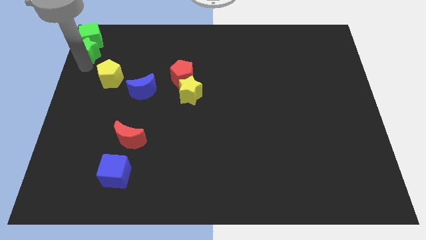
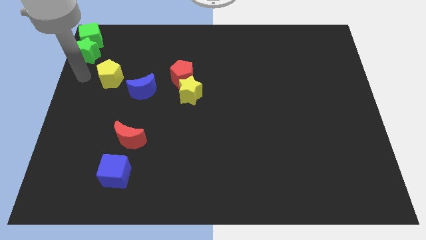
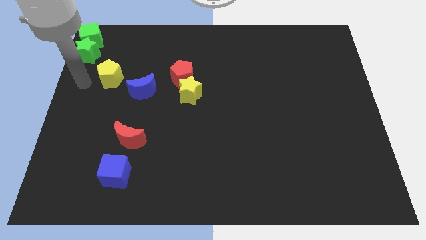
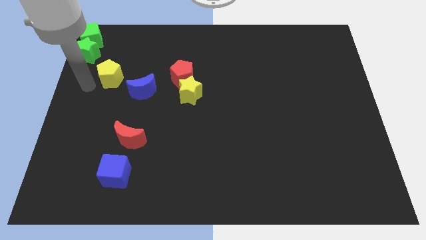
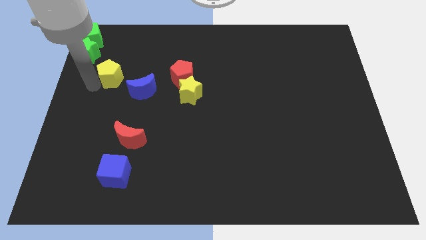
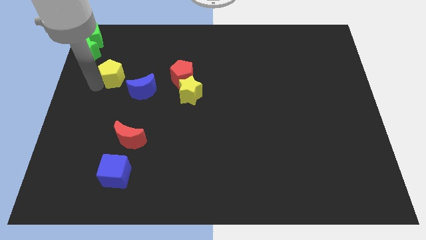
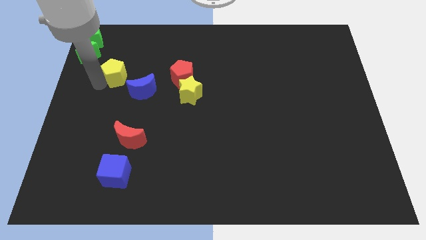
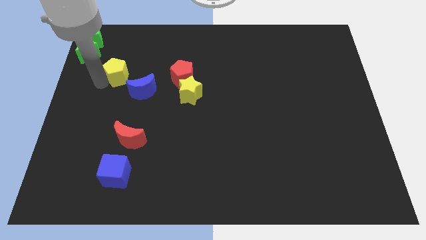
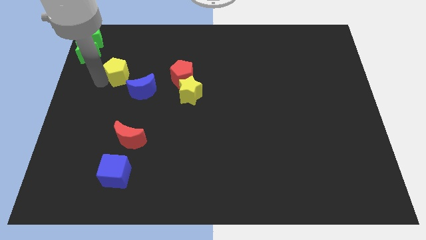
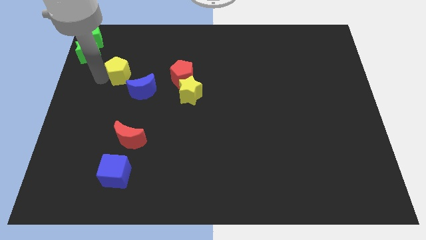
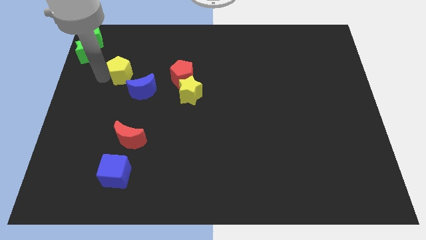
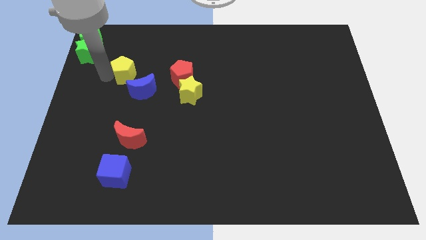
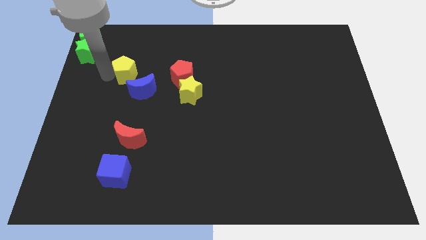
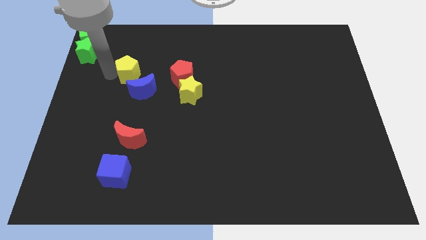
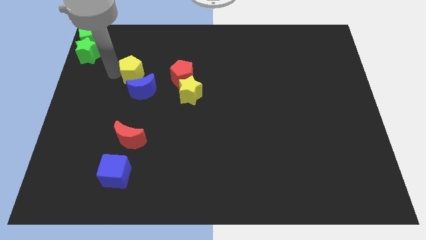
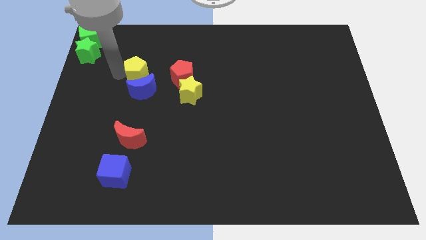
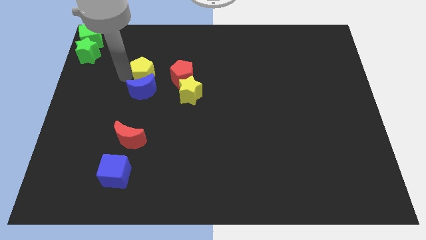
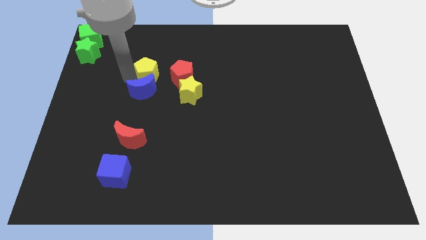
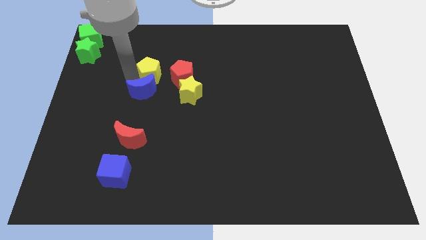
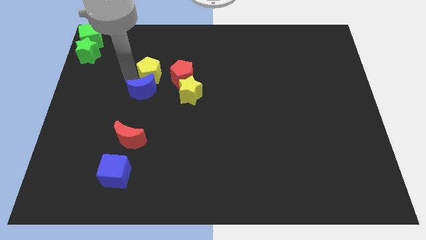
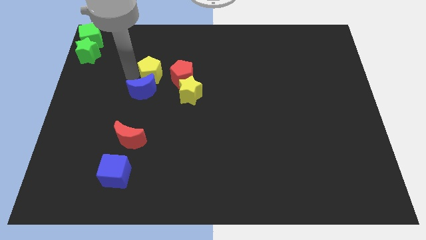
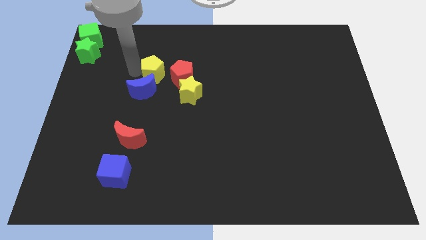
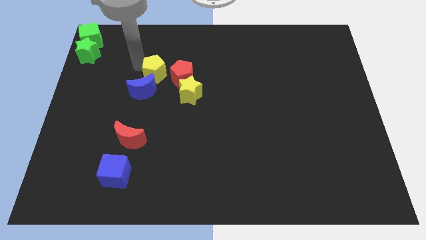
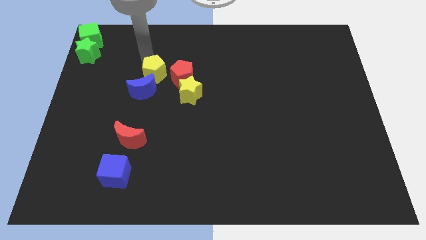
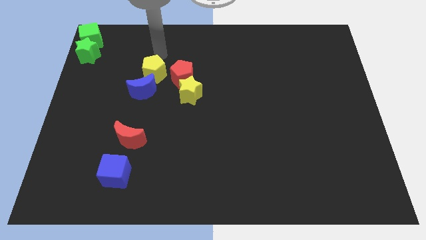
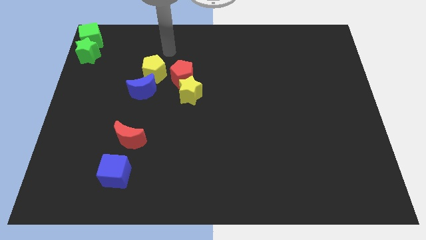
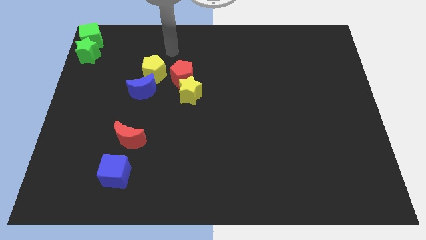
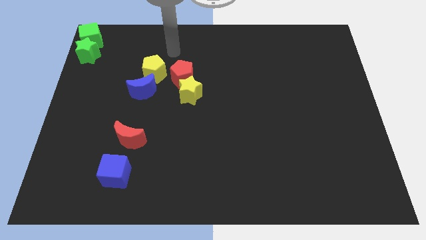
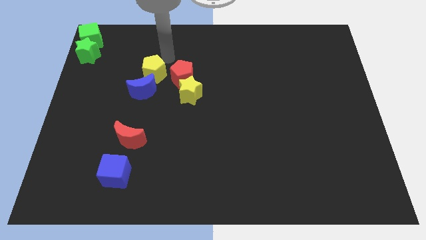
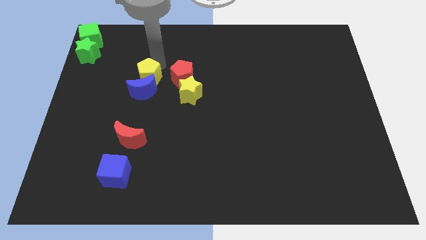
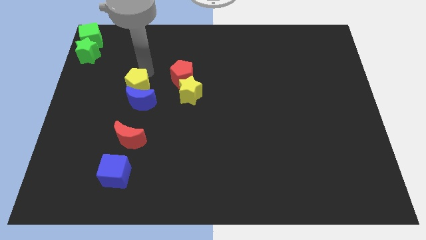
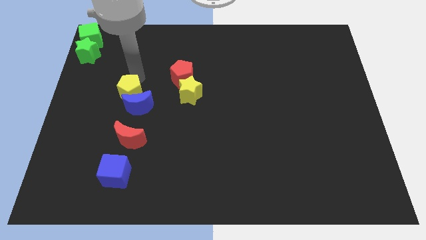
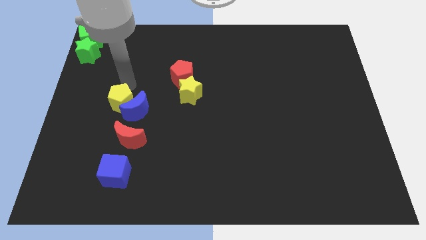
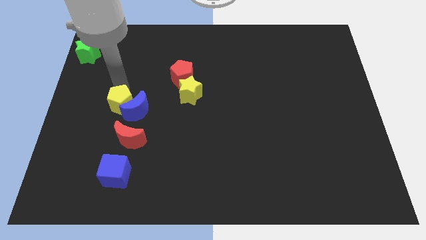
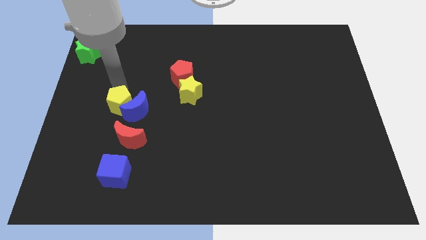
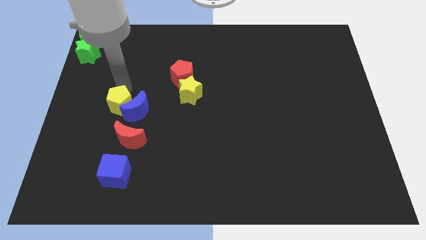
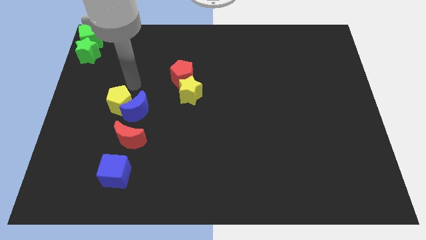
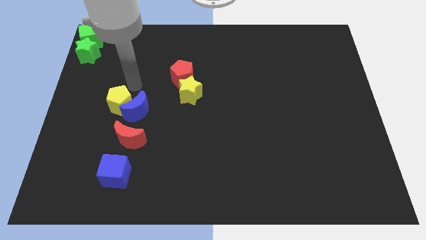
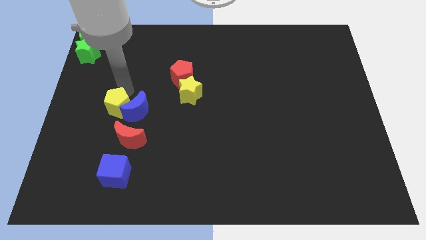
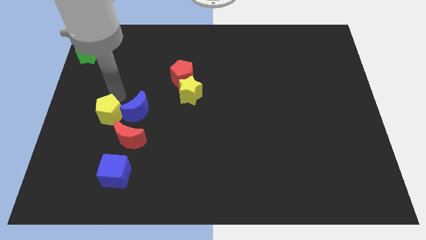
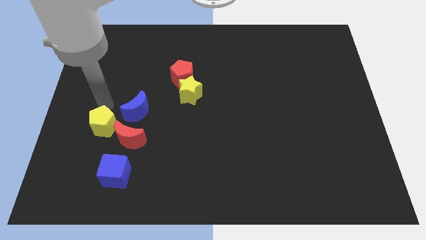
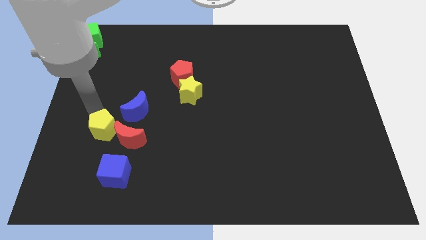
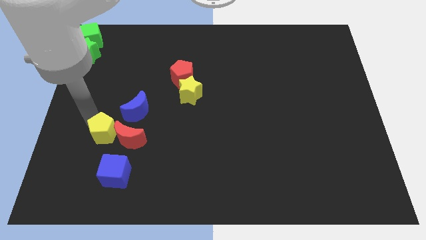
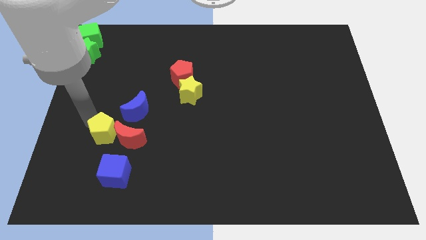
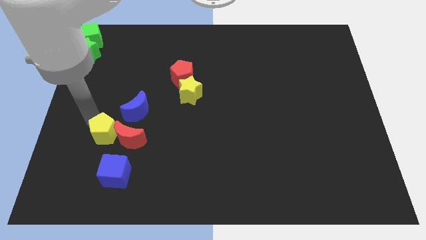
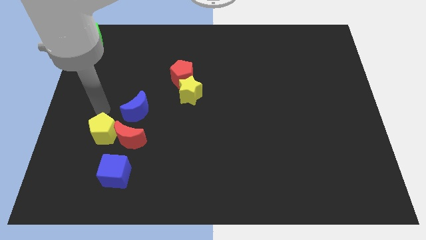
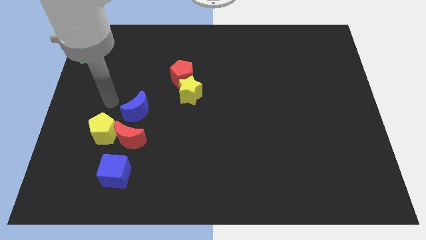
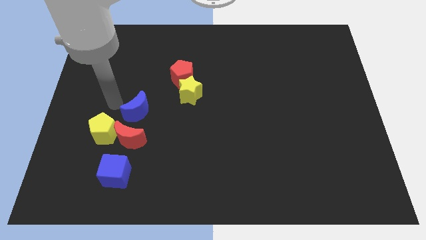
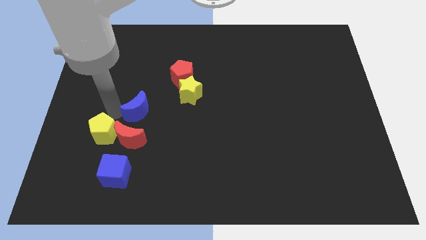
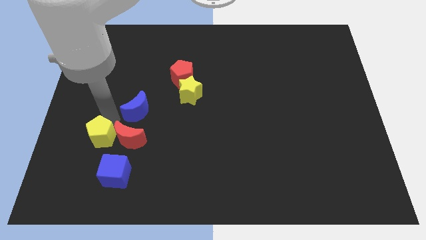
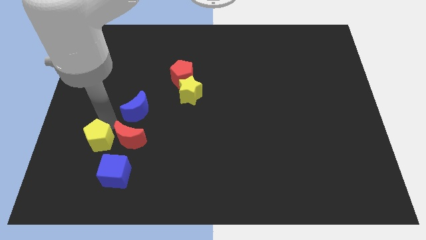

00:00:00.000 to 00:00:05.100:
move the yellow pentagon to the left of the red crescent

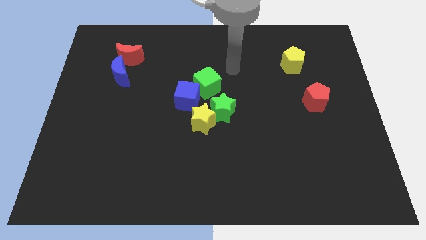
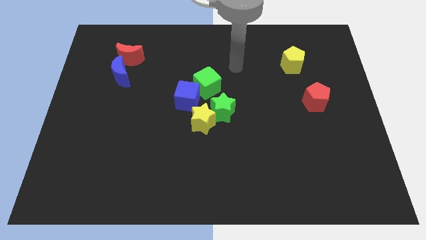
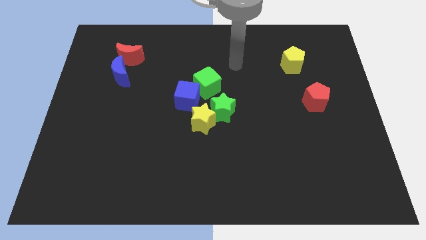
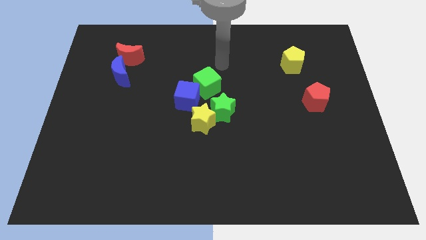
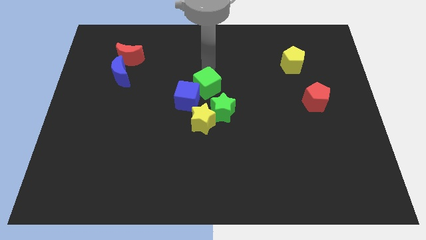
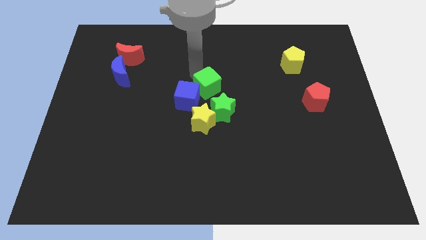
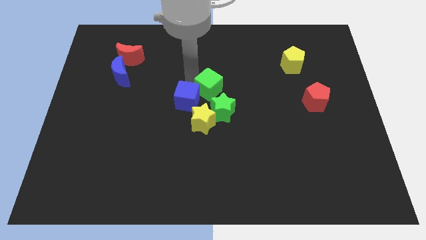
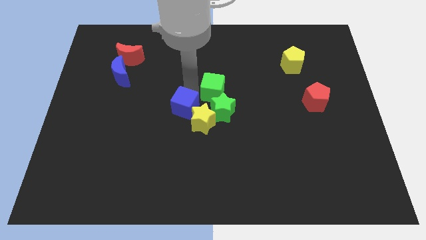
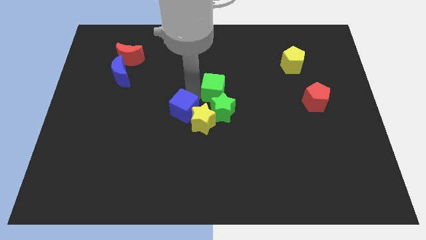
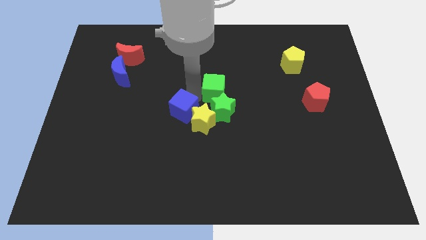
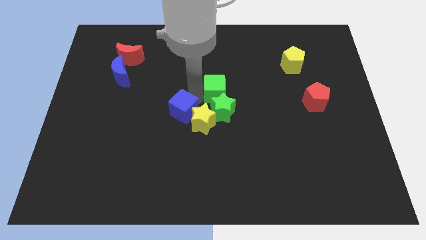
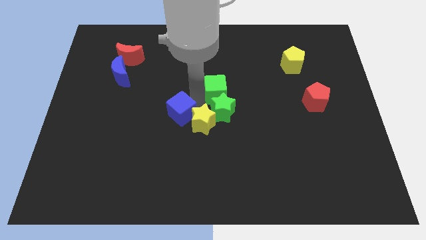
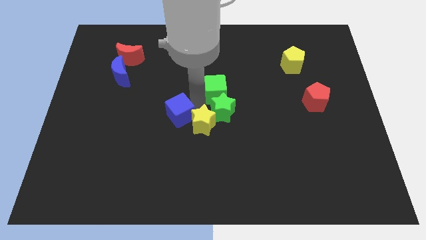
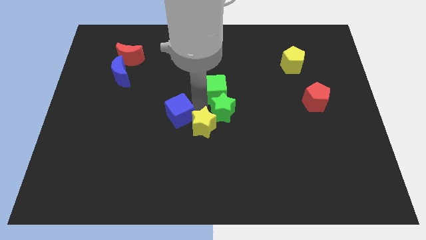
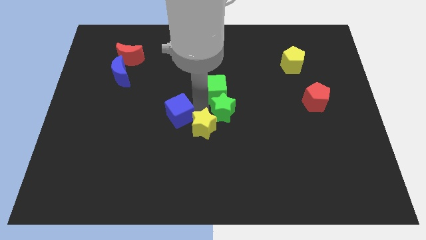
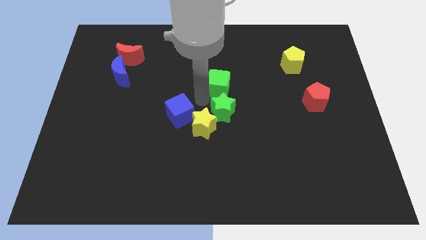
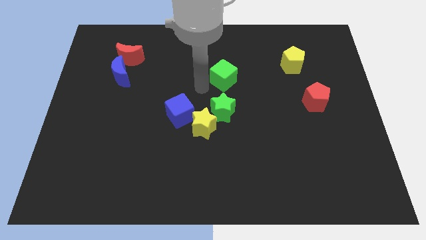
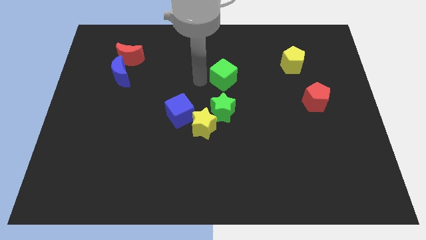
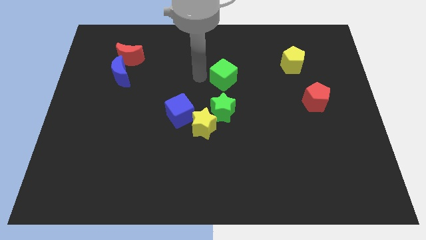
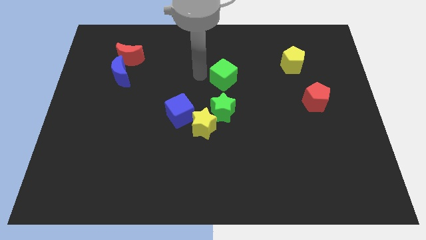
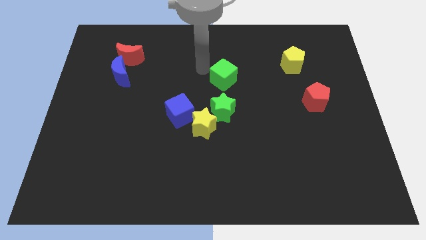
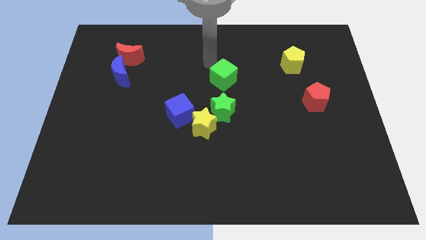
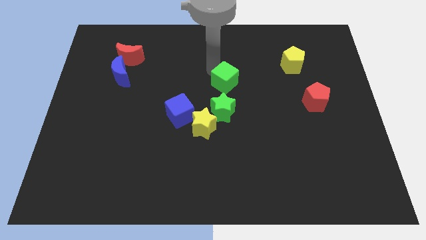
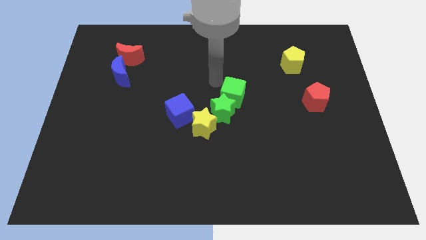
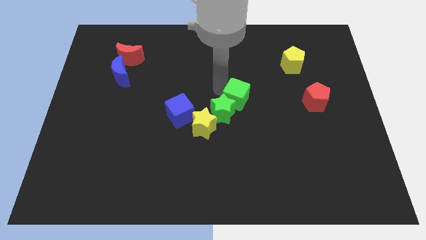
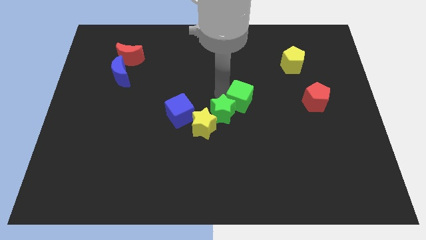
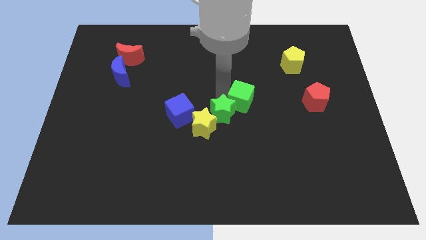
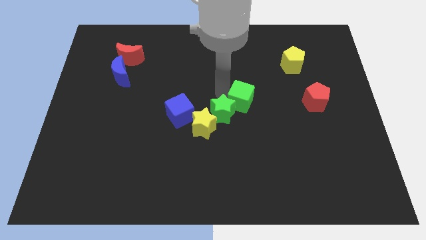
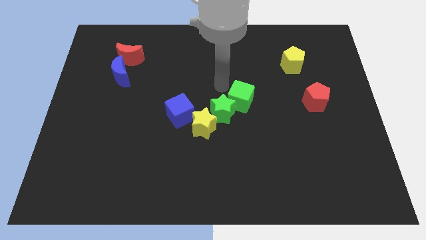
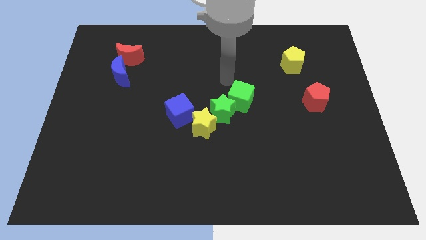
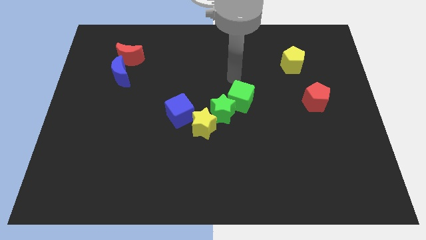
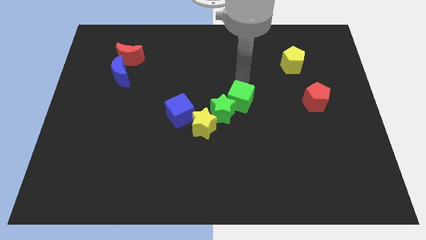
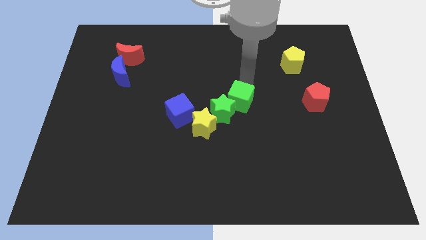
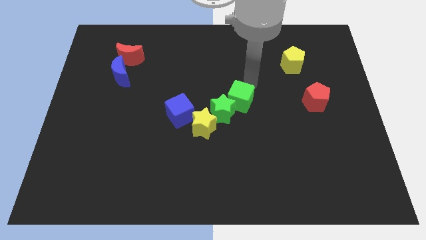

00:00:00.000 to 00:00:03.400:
separate green cube from blue cube

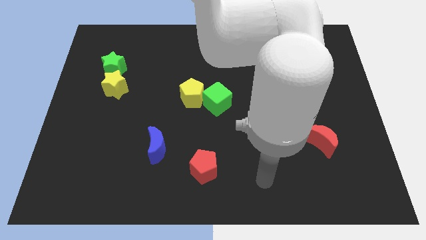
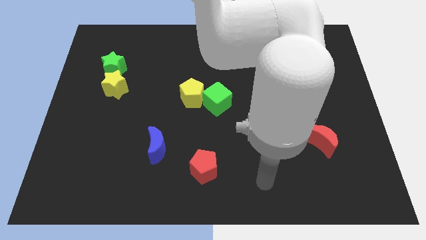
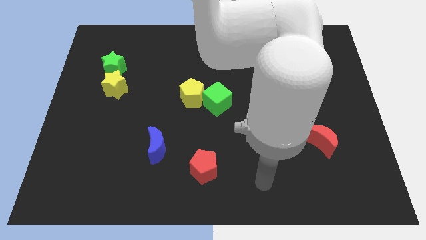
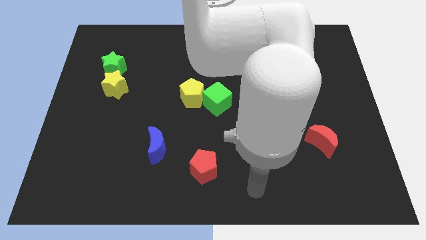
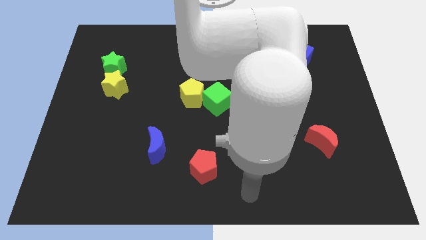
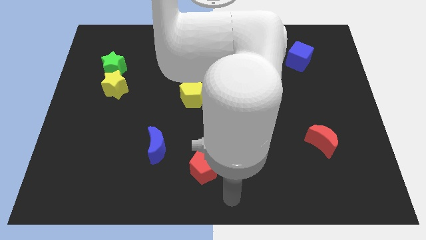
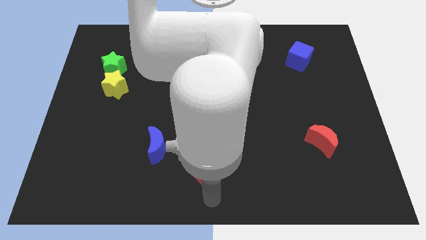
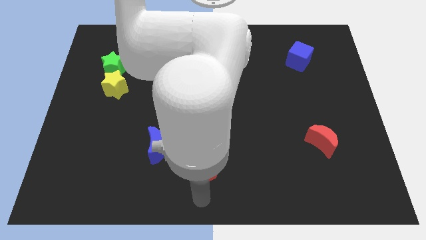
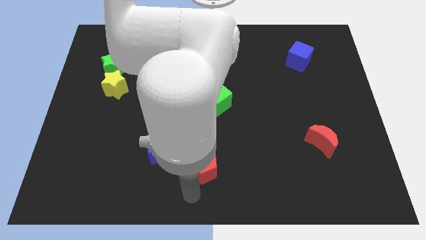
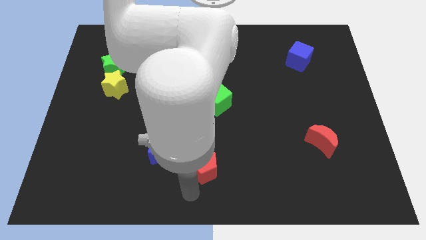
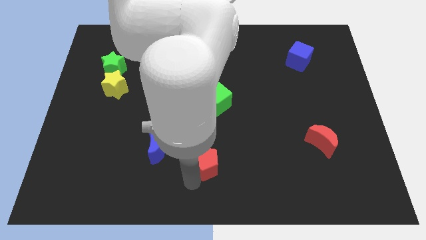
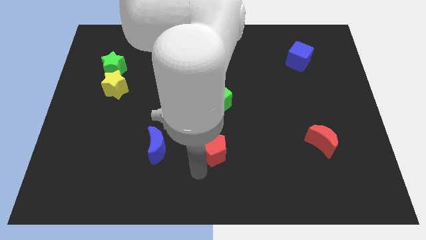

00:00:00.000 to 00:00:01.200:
move your arm close to the red pentagon
